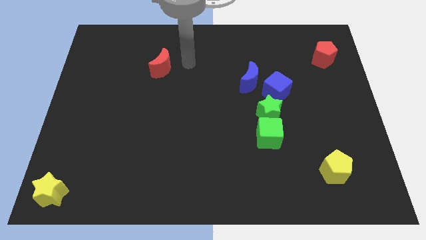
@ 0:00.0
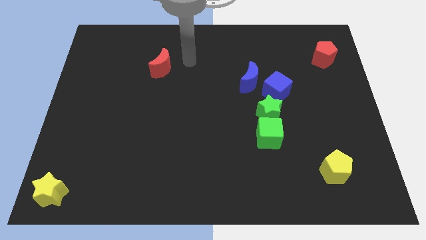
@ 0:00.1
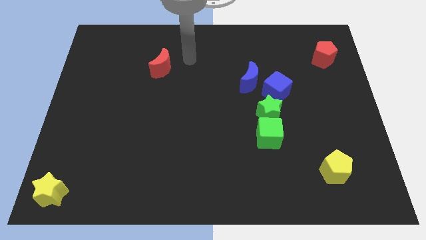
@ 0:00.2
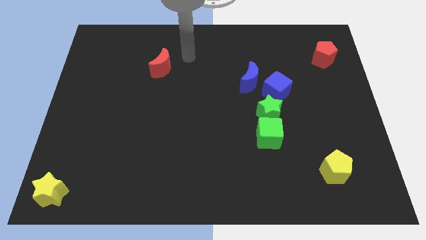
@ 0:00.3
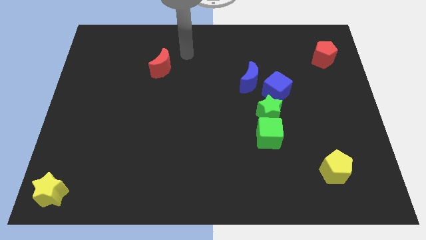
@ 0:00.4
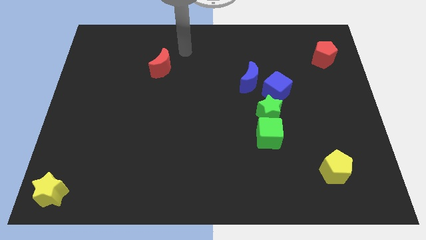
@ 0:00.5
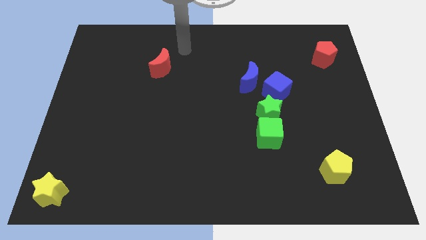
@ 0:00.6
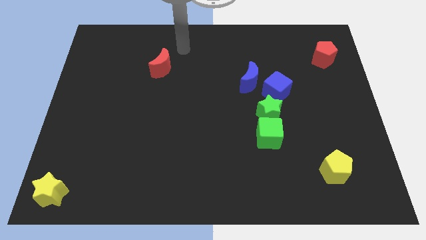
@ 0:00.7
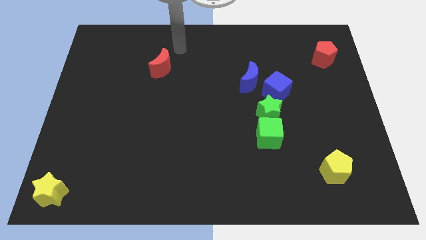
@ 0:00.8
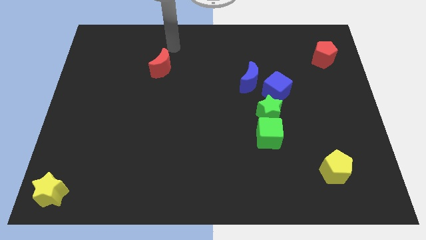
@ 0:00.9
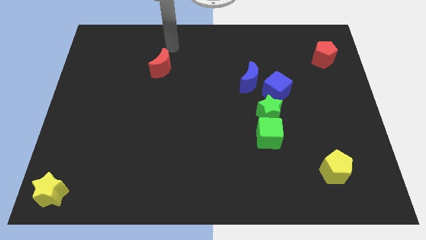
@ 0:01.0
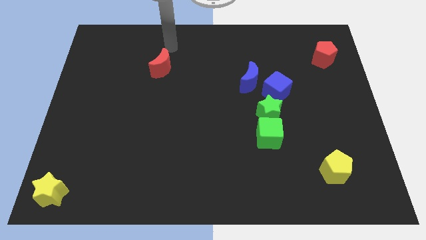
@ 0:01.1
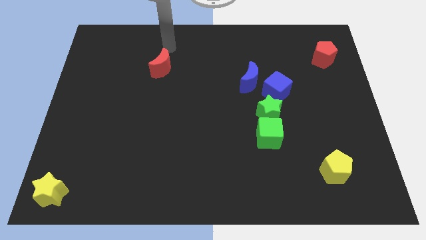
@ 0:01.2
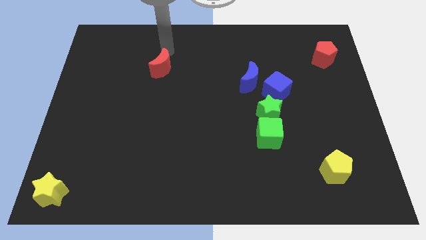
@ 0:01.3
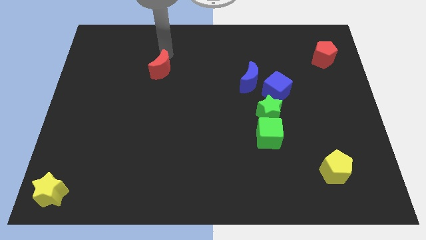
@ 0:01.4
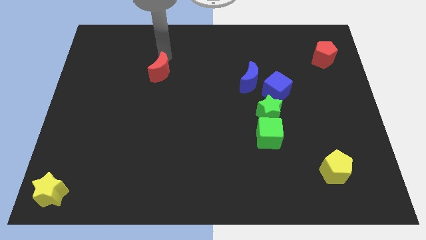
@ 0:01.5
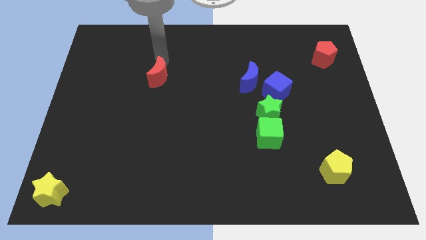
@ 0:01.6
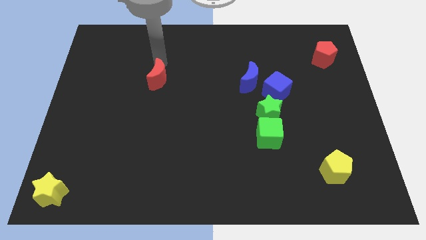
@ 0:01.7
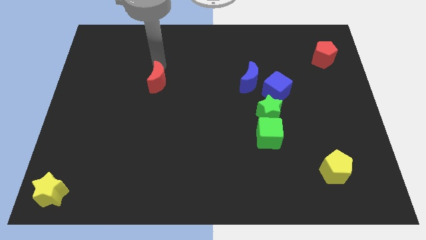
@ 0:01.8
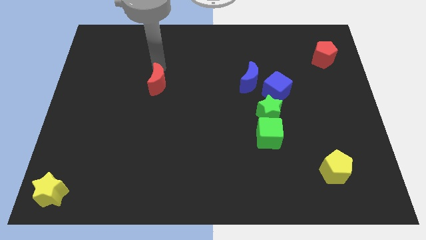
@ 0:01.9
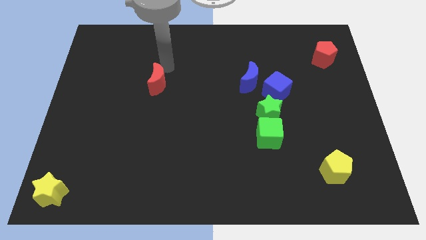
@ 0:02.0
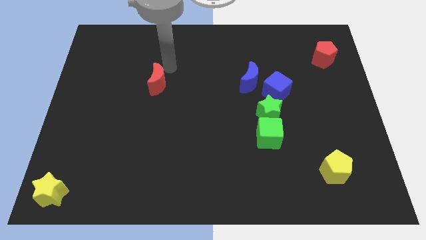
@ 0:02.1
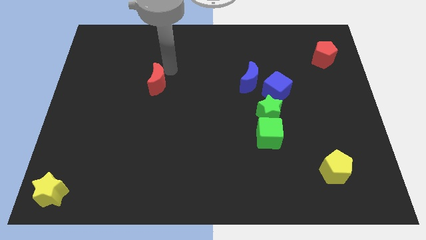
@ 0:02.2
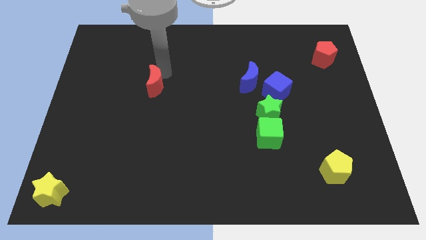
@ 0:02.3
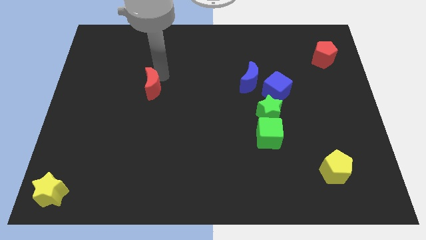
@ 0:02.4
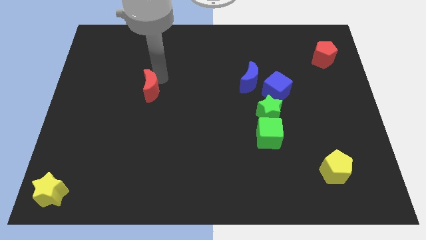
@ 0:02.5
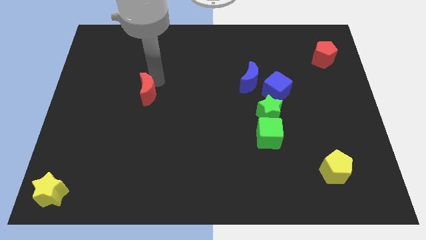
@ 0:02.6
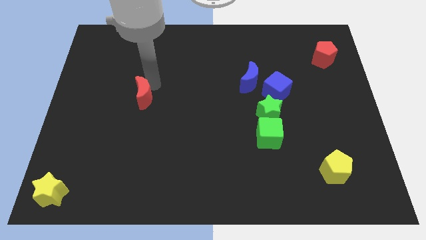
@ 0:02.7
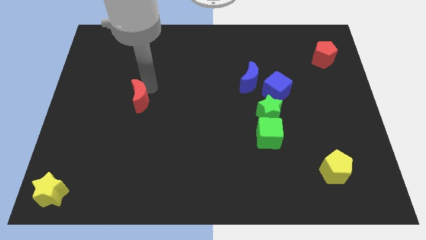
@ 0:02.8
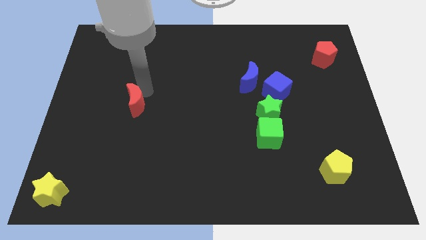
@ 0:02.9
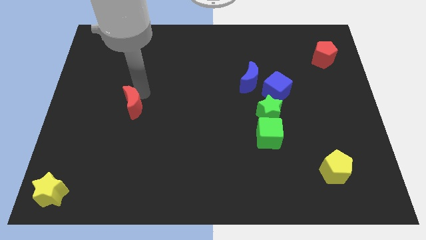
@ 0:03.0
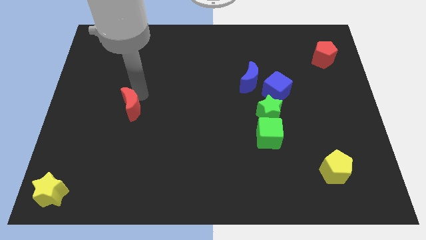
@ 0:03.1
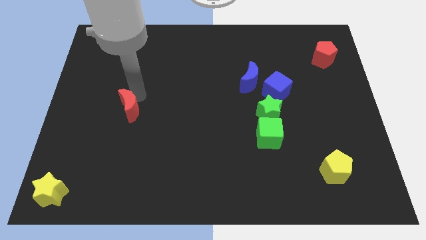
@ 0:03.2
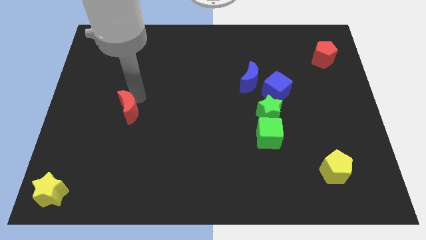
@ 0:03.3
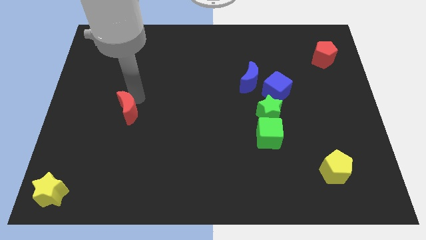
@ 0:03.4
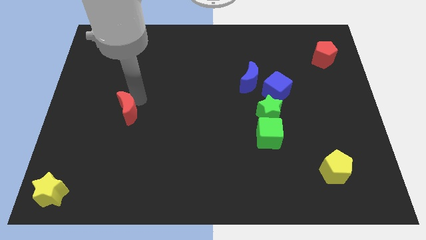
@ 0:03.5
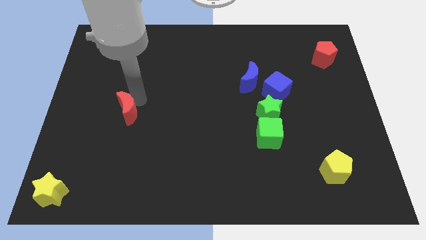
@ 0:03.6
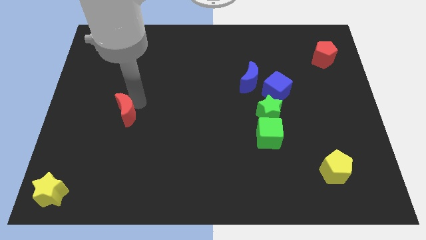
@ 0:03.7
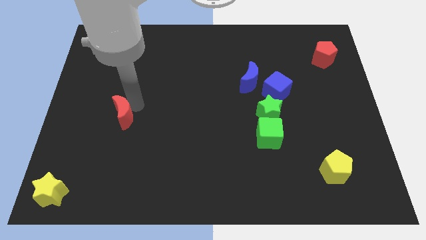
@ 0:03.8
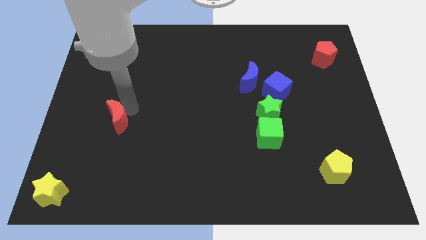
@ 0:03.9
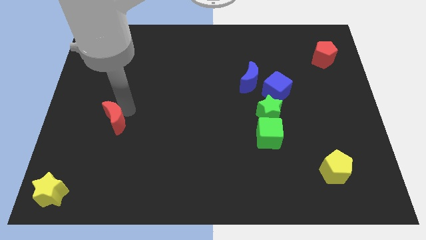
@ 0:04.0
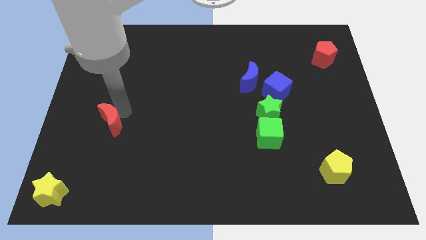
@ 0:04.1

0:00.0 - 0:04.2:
place red moon to the left of green cube

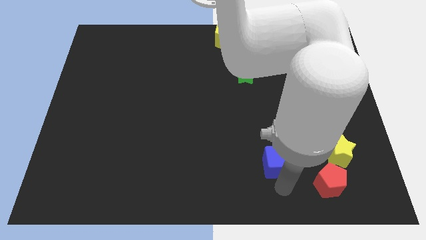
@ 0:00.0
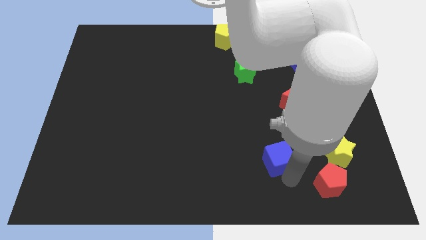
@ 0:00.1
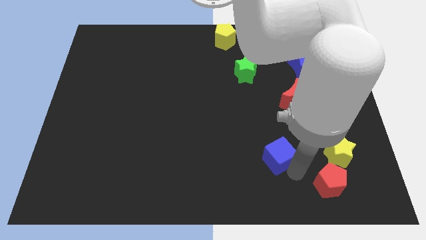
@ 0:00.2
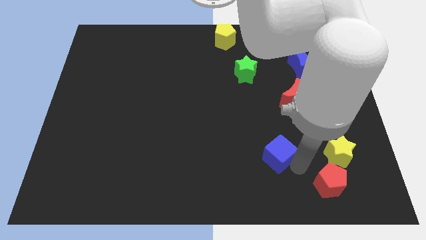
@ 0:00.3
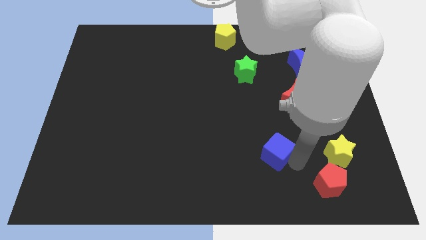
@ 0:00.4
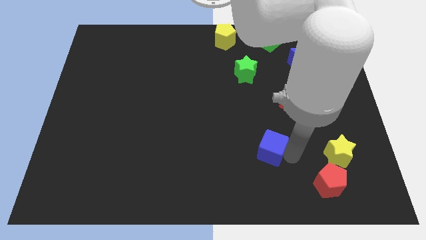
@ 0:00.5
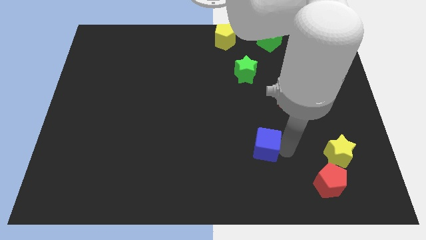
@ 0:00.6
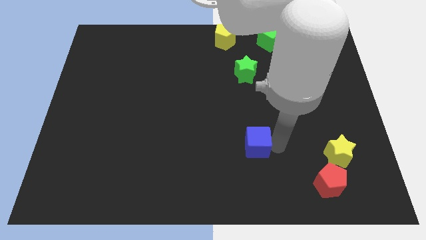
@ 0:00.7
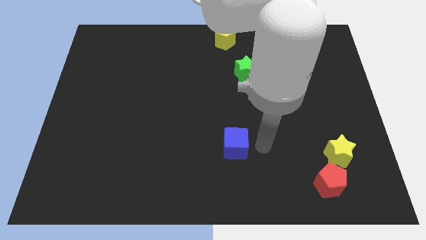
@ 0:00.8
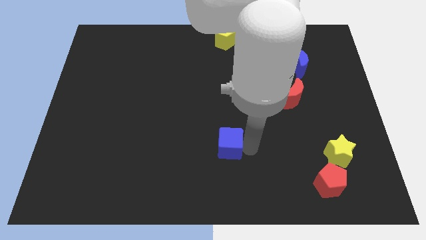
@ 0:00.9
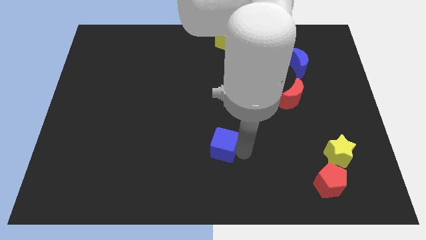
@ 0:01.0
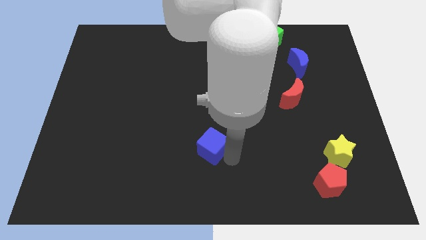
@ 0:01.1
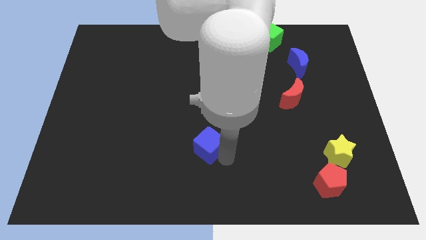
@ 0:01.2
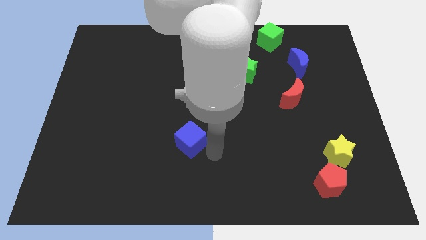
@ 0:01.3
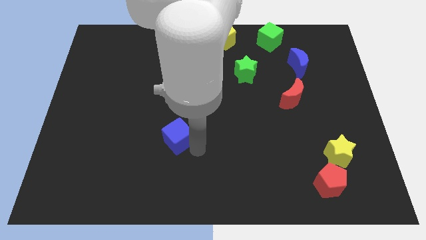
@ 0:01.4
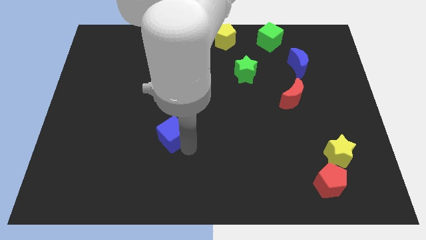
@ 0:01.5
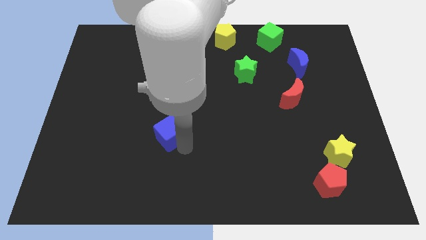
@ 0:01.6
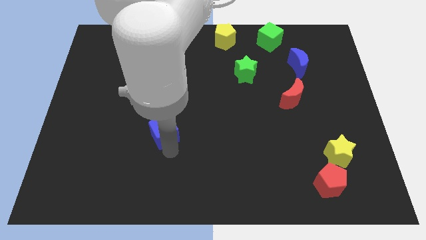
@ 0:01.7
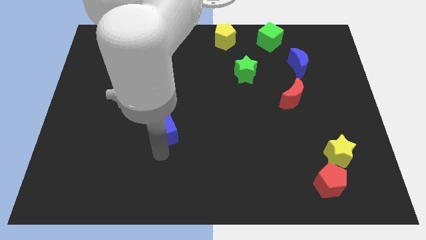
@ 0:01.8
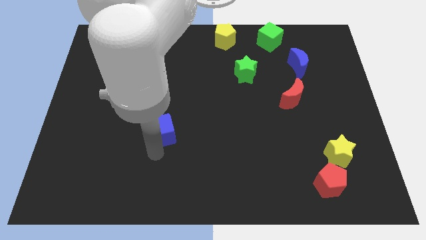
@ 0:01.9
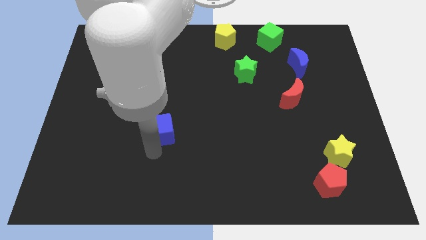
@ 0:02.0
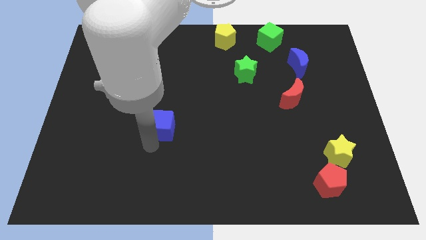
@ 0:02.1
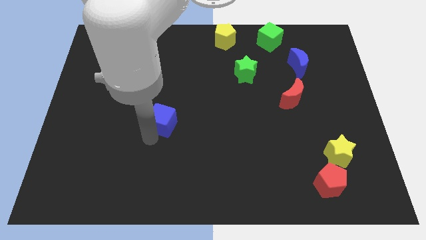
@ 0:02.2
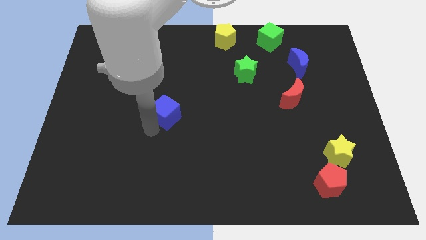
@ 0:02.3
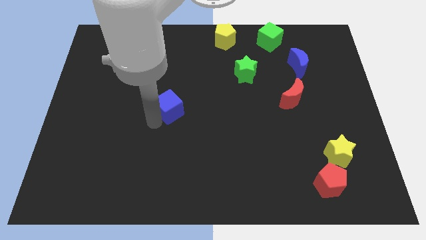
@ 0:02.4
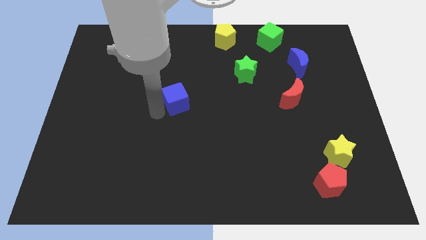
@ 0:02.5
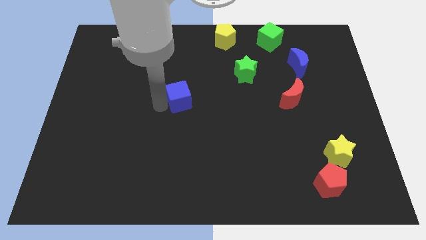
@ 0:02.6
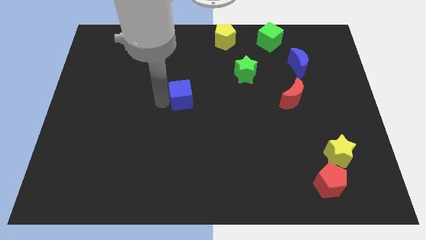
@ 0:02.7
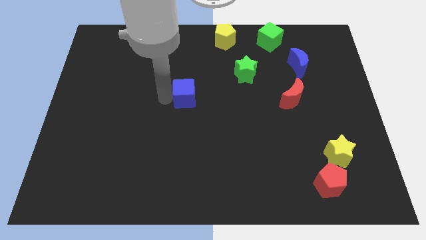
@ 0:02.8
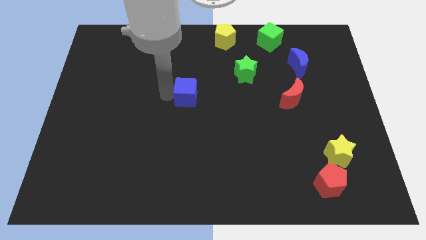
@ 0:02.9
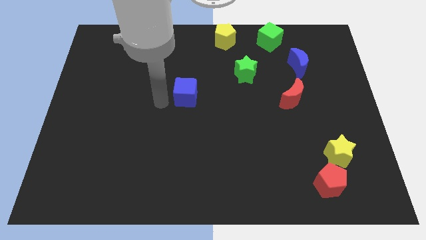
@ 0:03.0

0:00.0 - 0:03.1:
move the blue cube towards the center of the board

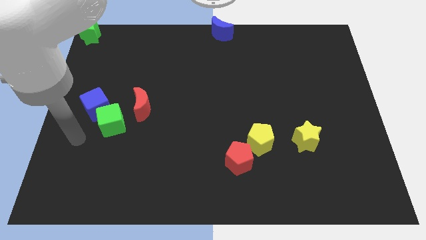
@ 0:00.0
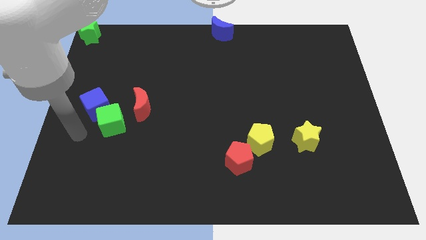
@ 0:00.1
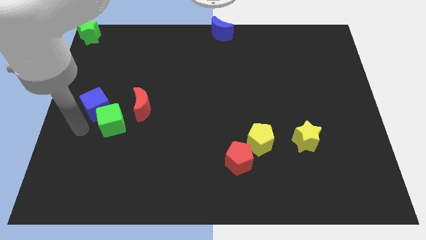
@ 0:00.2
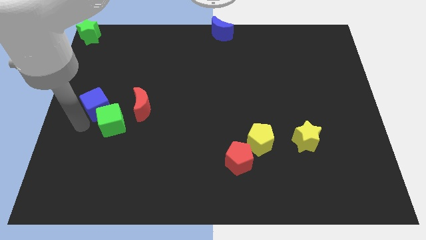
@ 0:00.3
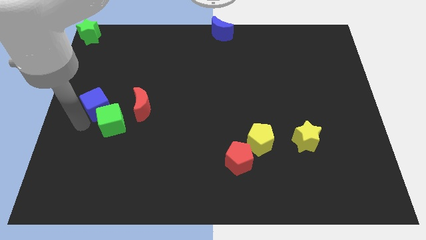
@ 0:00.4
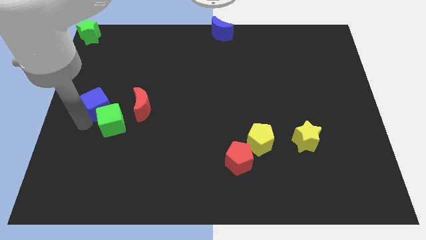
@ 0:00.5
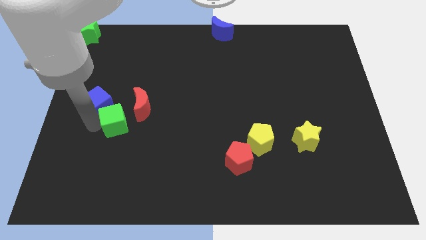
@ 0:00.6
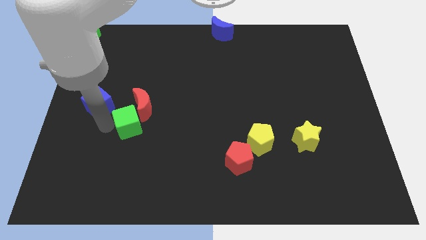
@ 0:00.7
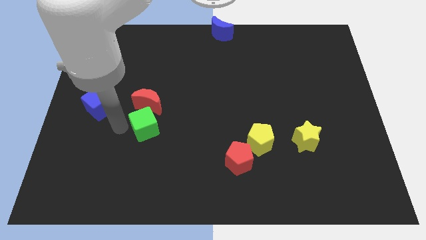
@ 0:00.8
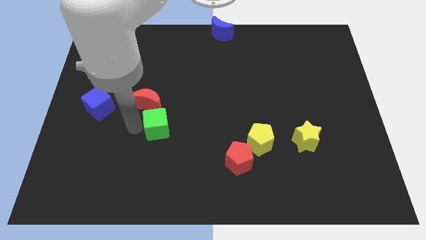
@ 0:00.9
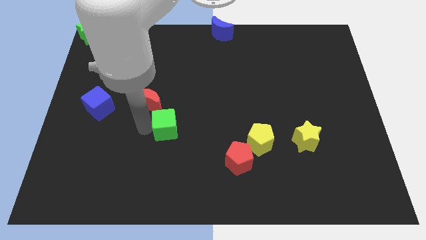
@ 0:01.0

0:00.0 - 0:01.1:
slide green cube into red moon

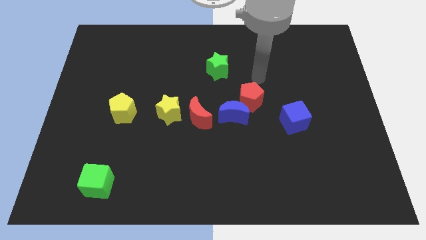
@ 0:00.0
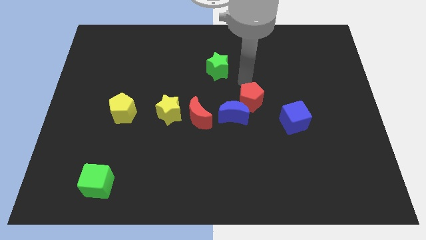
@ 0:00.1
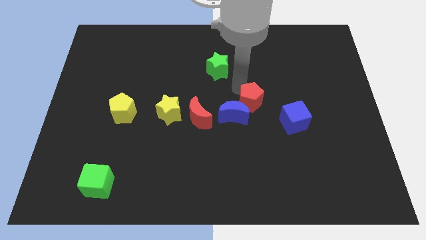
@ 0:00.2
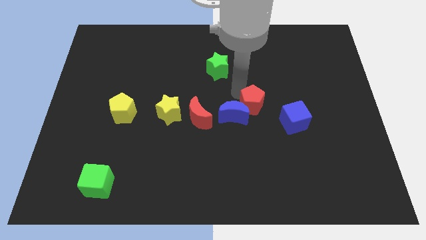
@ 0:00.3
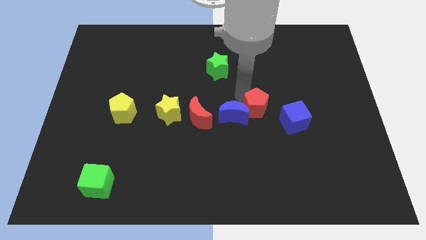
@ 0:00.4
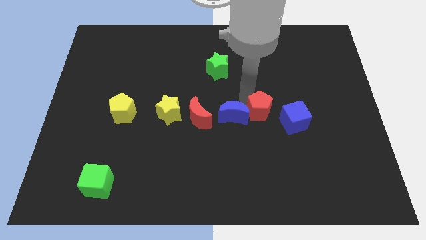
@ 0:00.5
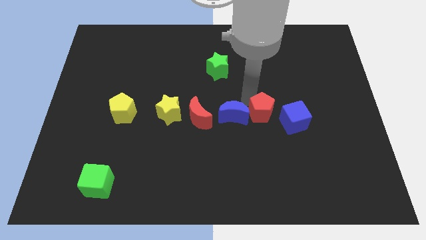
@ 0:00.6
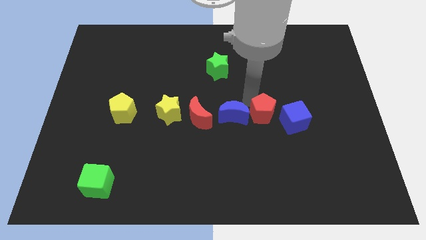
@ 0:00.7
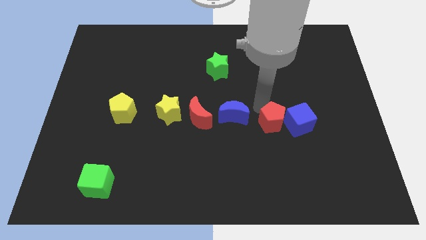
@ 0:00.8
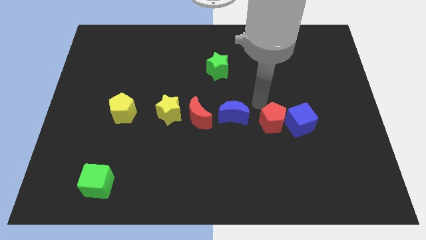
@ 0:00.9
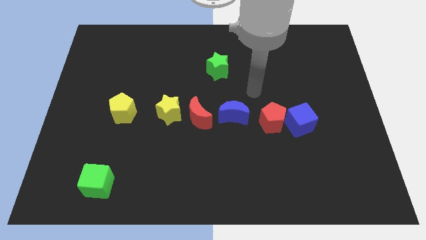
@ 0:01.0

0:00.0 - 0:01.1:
push red pentagon in to blue cube
